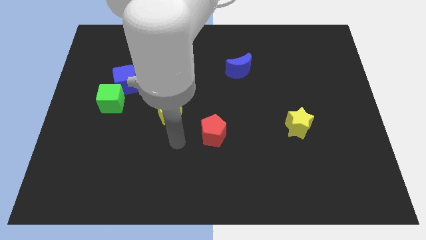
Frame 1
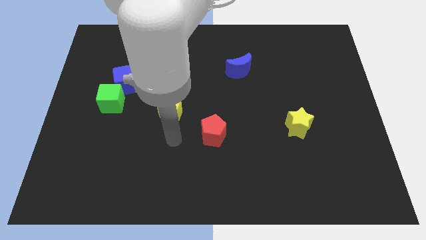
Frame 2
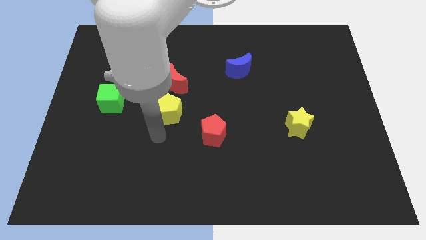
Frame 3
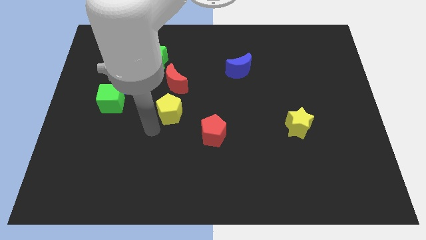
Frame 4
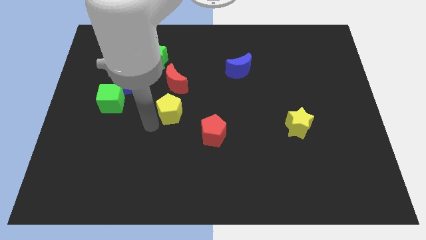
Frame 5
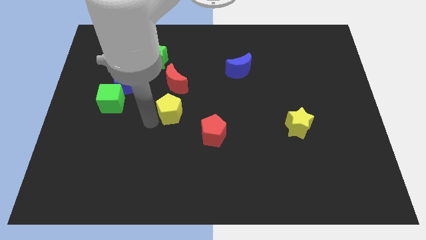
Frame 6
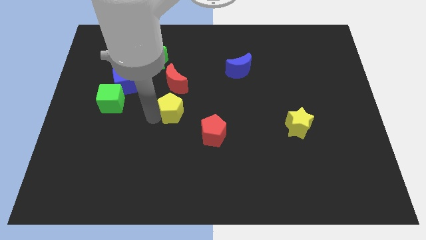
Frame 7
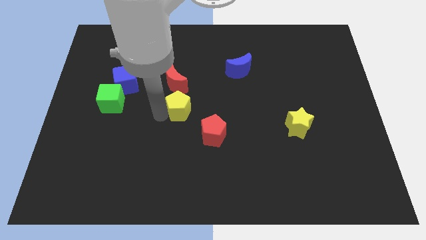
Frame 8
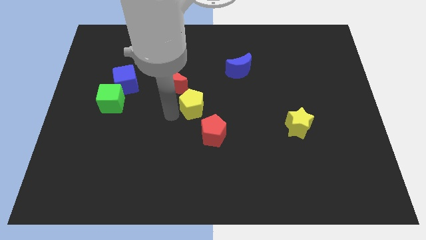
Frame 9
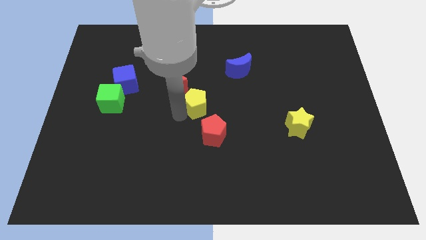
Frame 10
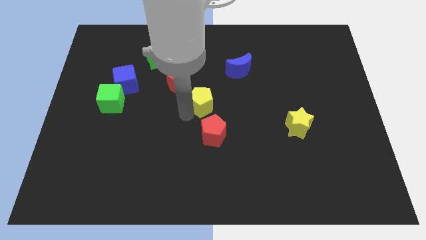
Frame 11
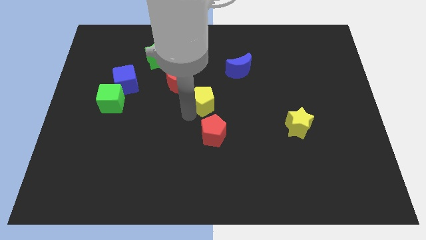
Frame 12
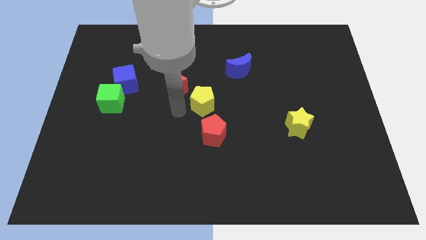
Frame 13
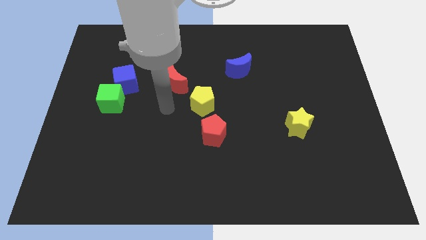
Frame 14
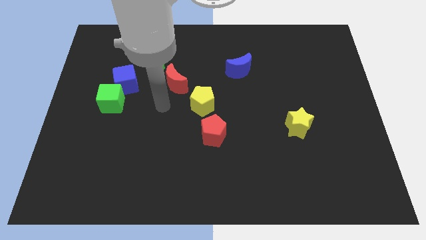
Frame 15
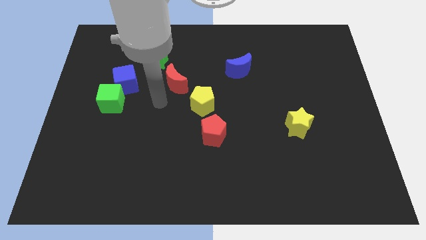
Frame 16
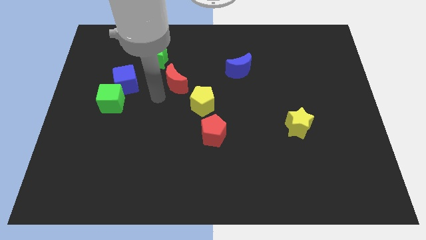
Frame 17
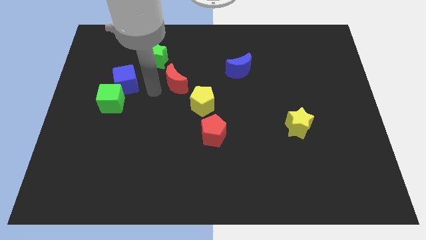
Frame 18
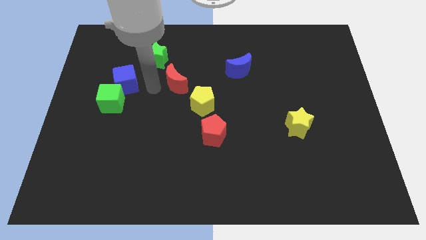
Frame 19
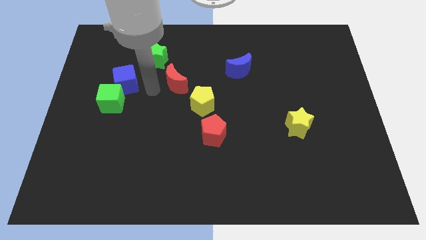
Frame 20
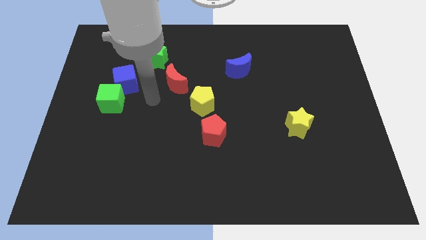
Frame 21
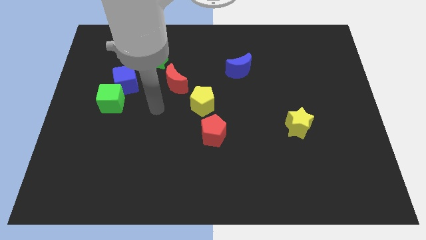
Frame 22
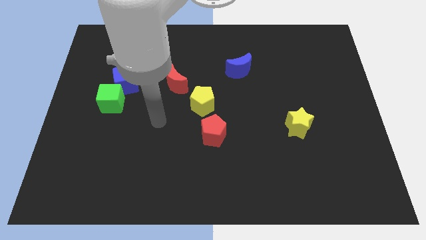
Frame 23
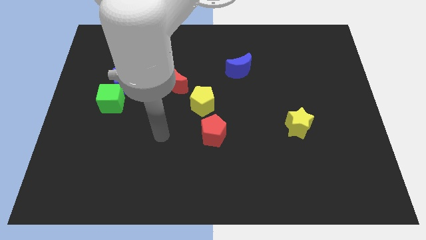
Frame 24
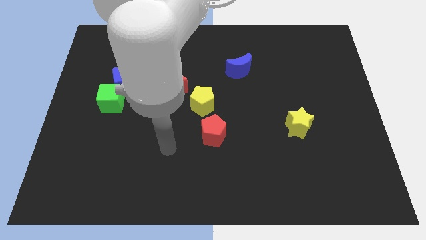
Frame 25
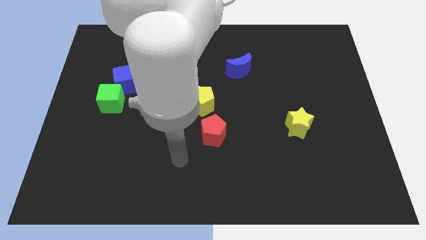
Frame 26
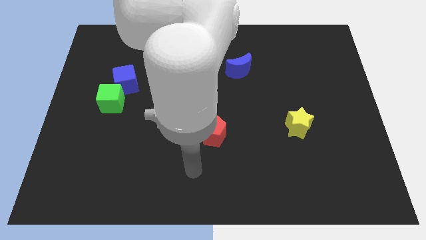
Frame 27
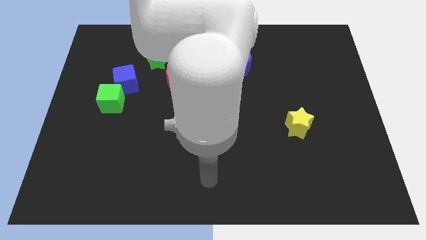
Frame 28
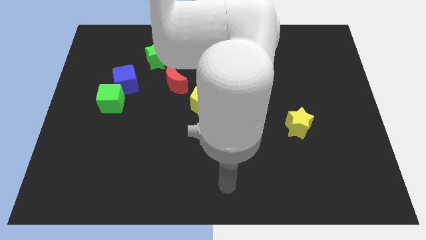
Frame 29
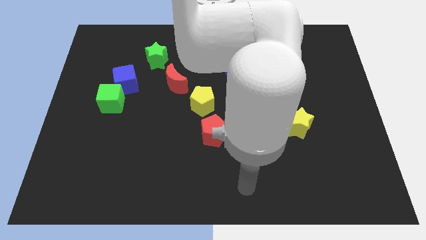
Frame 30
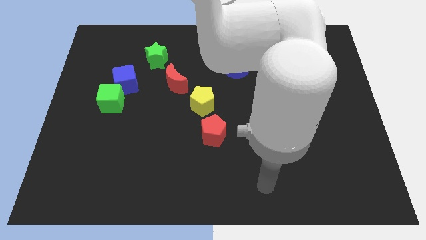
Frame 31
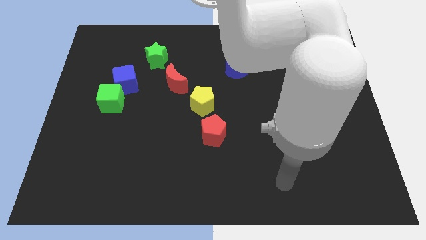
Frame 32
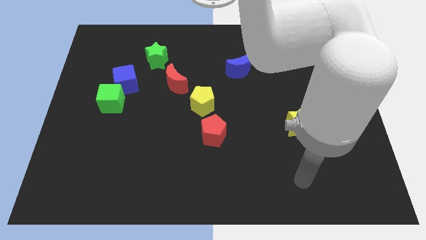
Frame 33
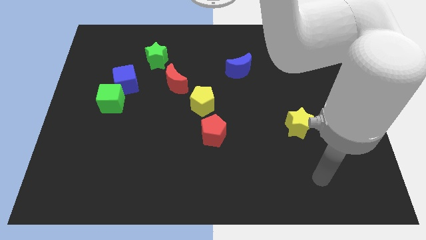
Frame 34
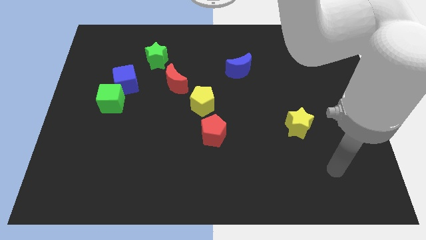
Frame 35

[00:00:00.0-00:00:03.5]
push the yellow pentagon towards the blue crescent

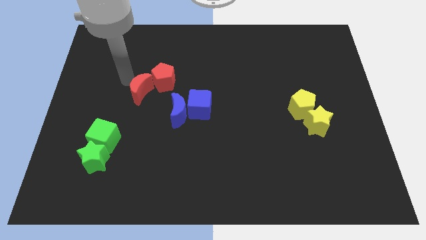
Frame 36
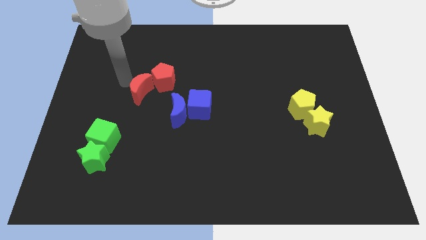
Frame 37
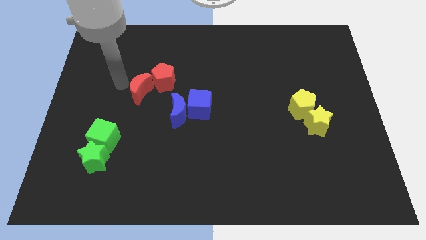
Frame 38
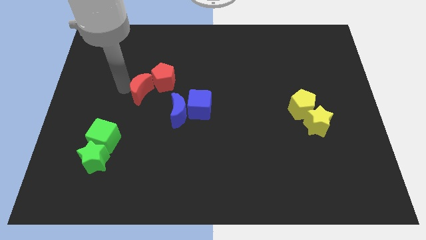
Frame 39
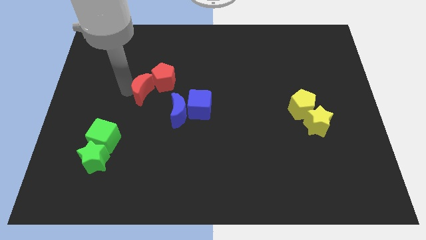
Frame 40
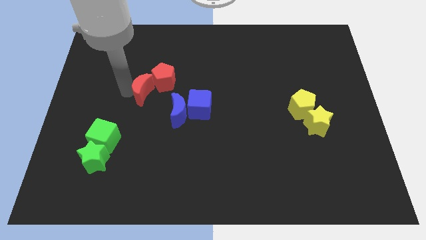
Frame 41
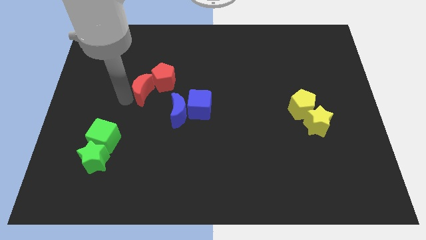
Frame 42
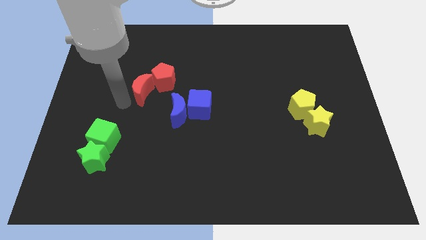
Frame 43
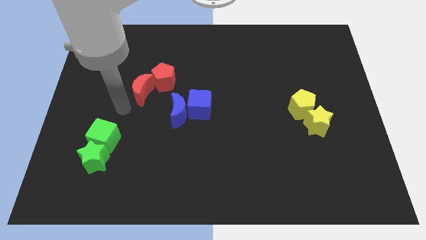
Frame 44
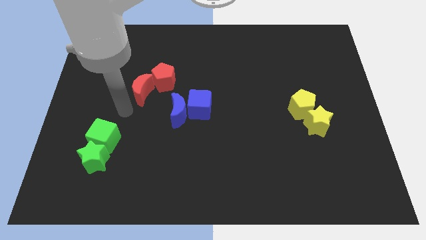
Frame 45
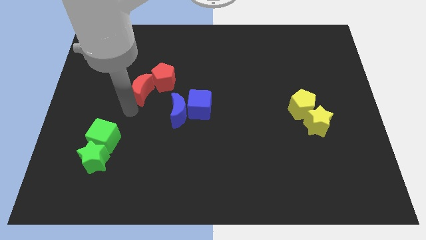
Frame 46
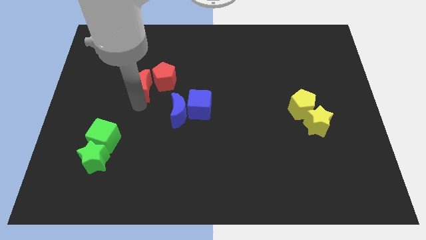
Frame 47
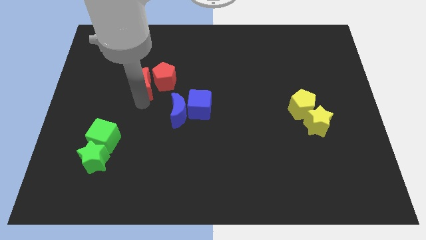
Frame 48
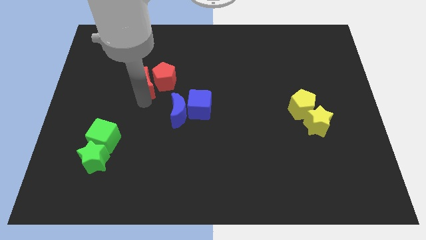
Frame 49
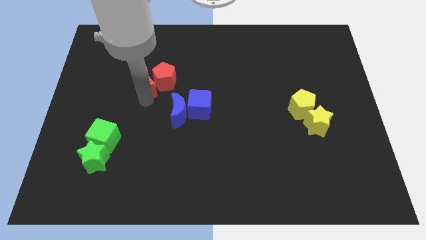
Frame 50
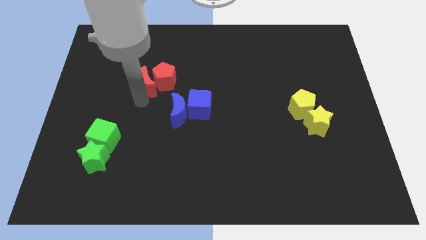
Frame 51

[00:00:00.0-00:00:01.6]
move the red crescent to the left of red pentagon

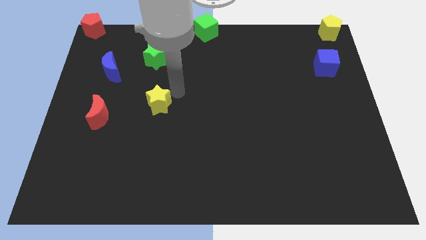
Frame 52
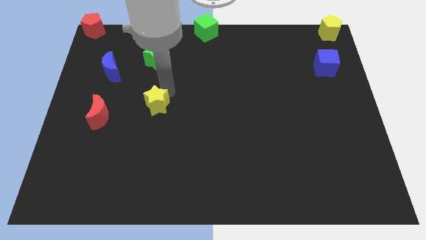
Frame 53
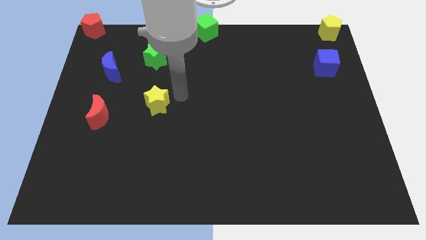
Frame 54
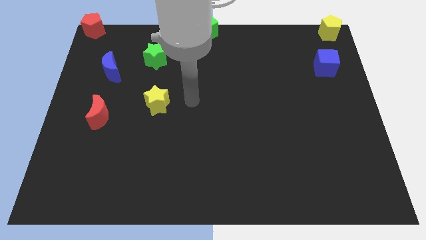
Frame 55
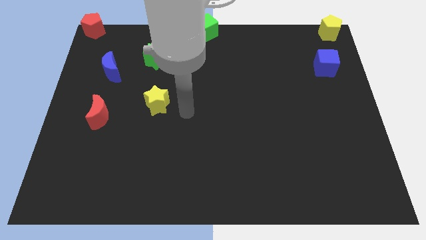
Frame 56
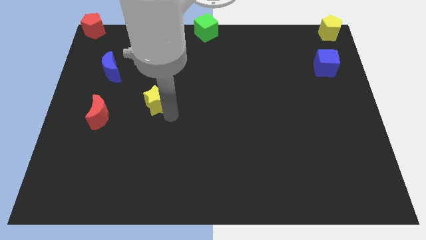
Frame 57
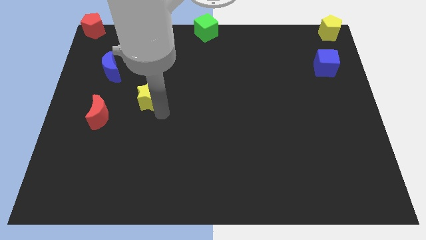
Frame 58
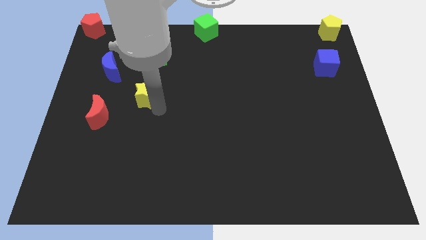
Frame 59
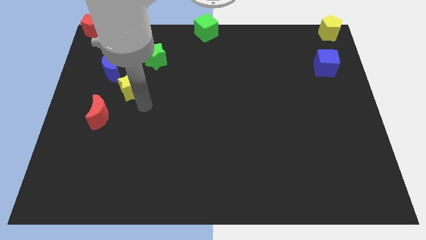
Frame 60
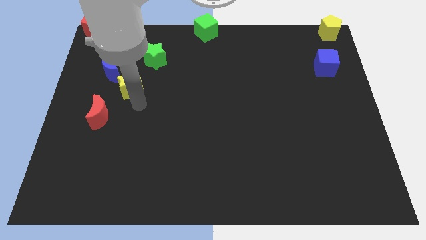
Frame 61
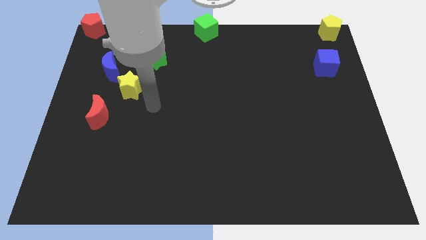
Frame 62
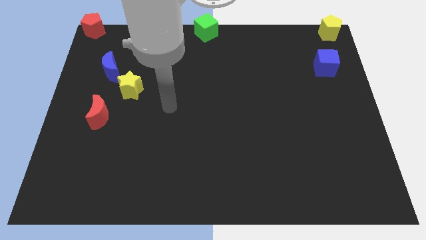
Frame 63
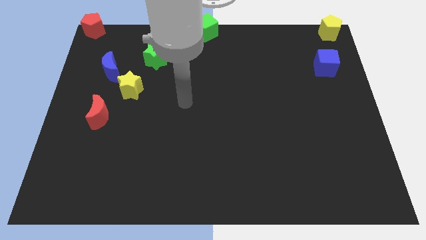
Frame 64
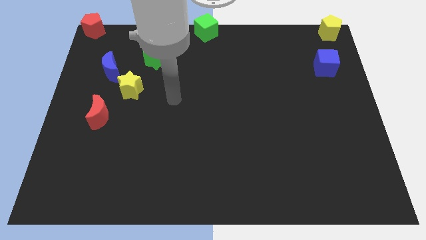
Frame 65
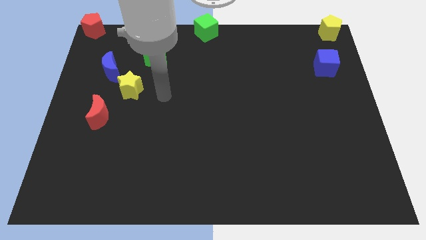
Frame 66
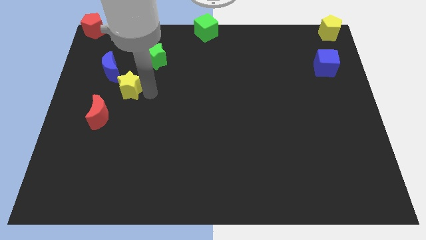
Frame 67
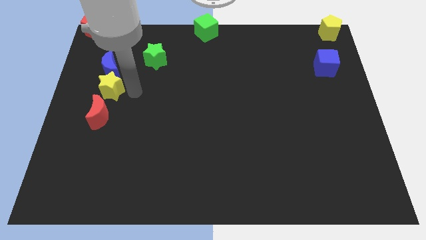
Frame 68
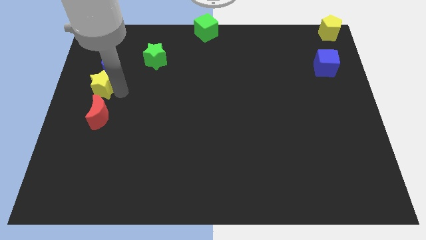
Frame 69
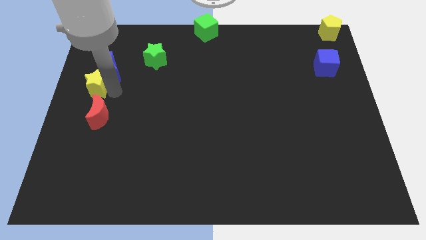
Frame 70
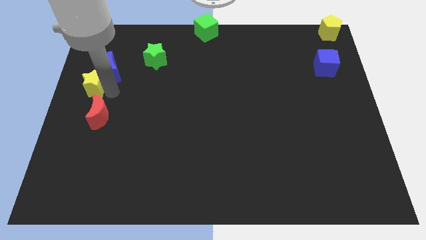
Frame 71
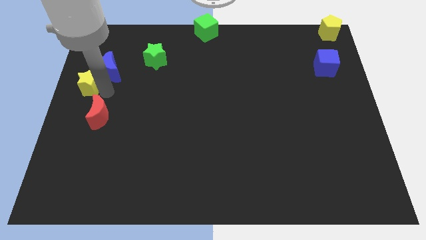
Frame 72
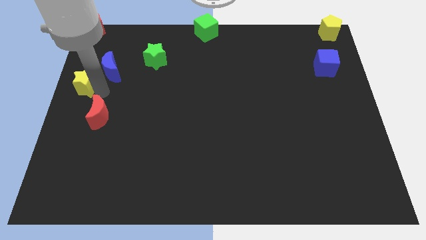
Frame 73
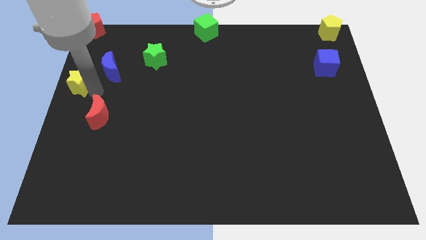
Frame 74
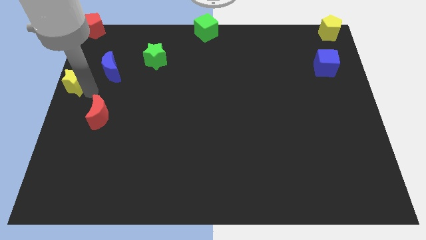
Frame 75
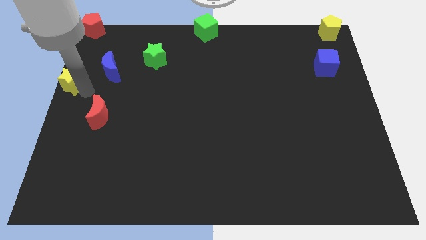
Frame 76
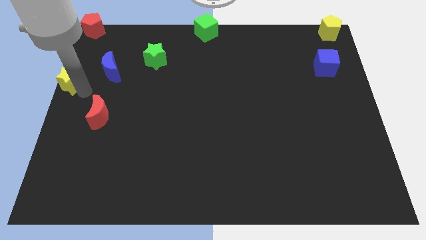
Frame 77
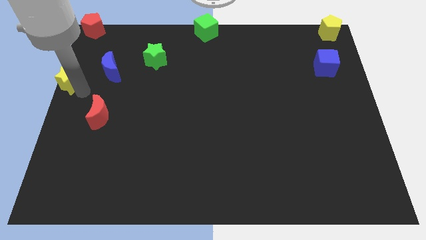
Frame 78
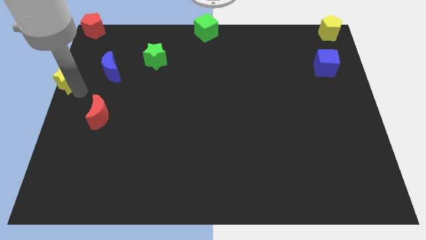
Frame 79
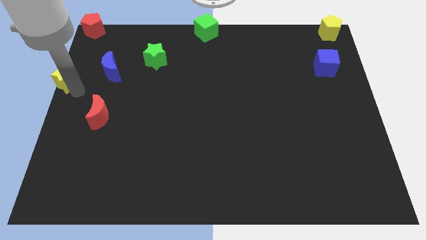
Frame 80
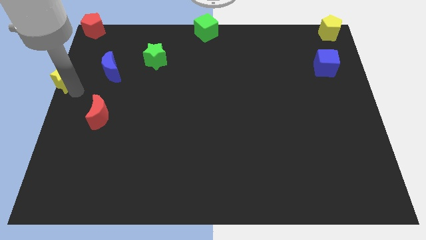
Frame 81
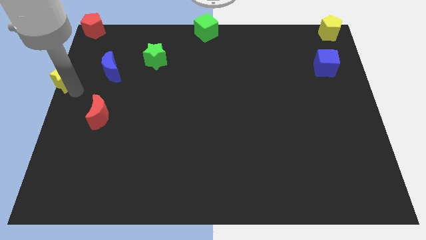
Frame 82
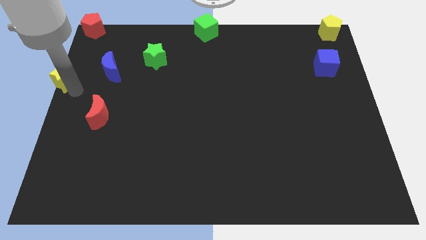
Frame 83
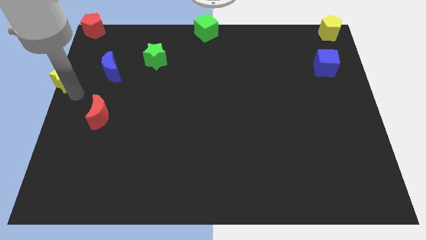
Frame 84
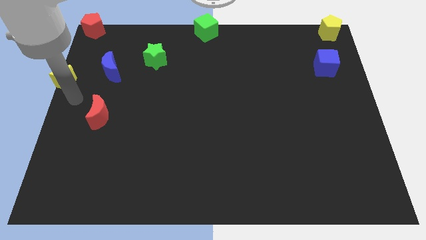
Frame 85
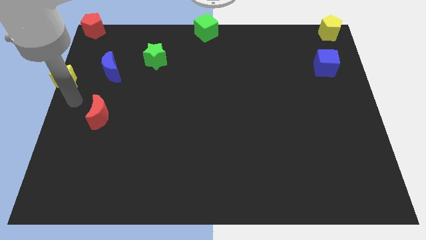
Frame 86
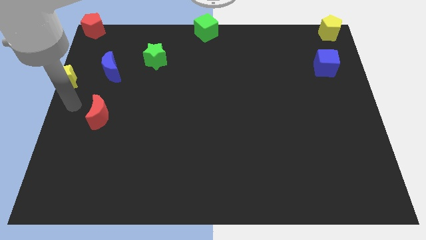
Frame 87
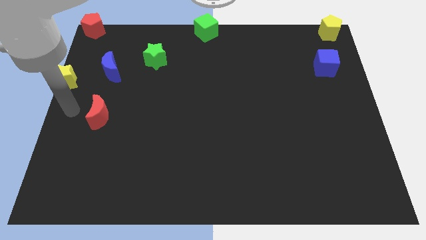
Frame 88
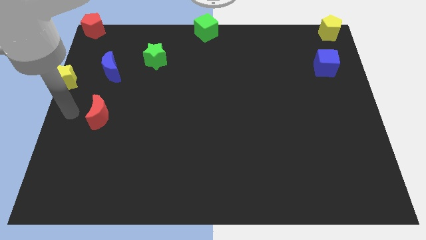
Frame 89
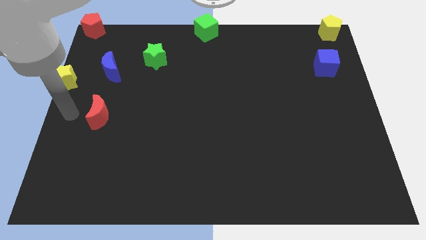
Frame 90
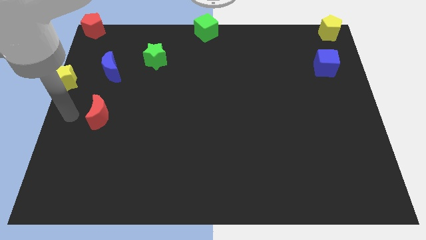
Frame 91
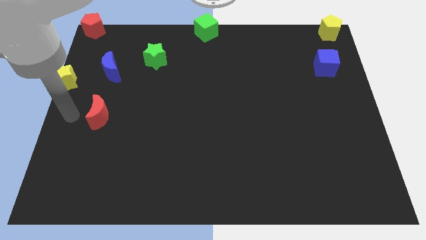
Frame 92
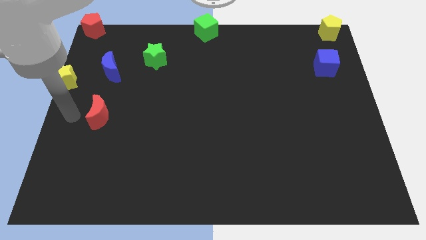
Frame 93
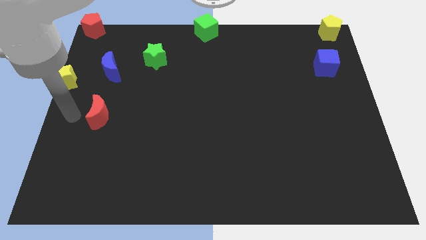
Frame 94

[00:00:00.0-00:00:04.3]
move the yellow star to the left side of the board
